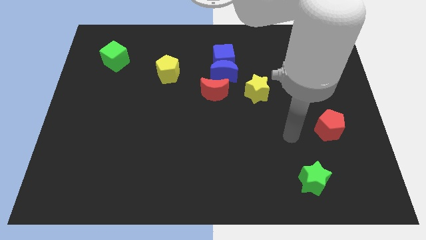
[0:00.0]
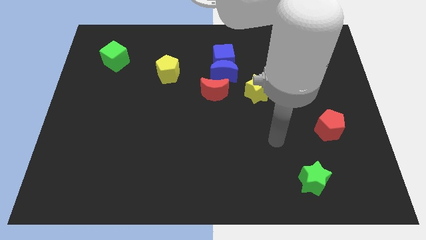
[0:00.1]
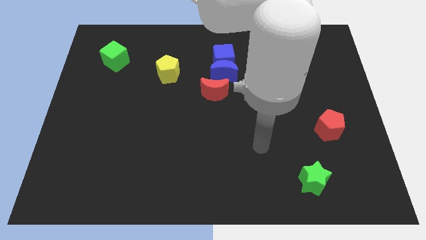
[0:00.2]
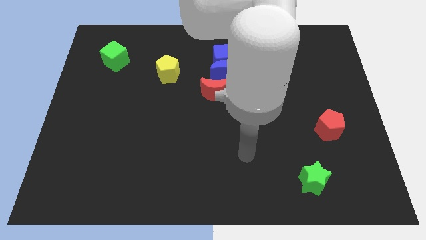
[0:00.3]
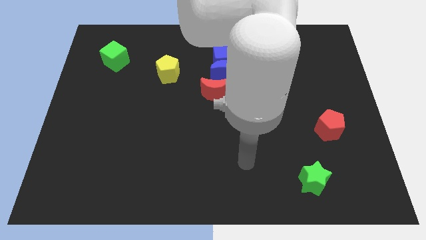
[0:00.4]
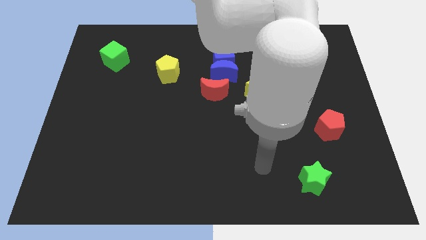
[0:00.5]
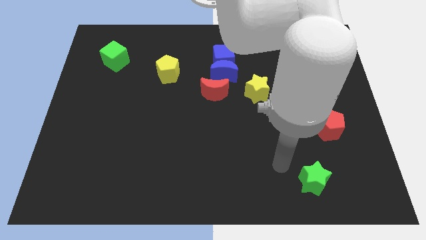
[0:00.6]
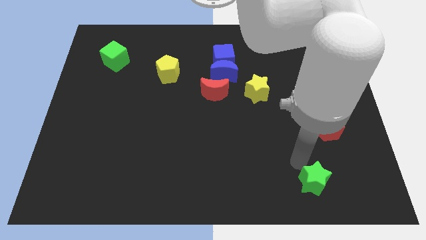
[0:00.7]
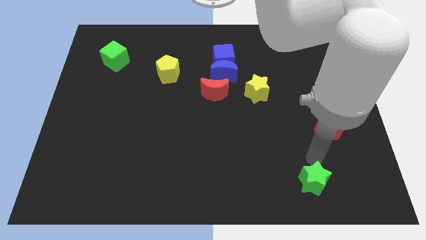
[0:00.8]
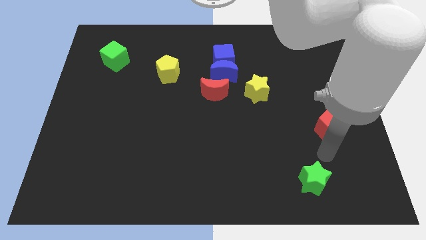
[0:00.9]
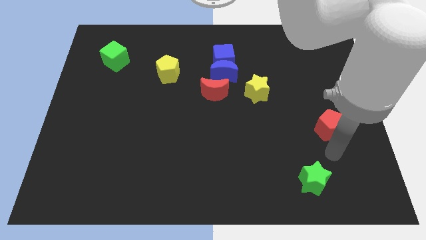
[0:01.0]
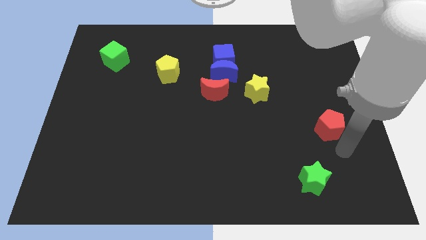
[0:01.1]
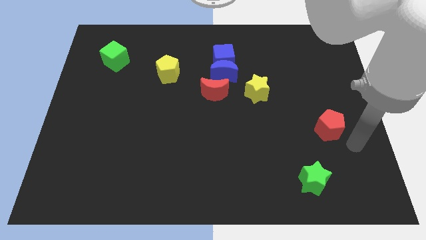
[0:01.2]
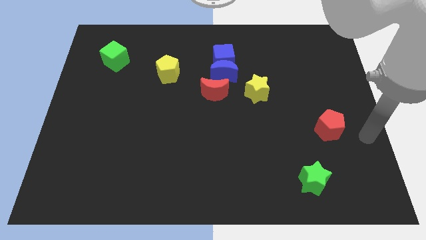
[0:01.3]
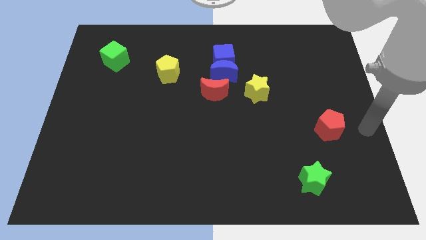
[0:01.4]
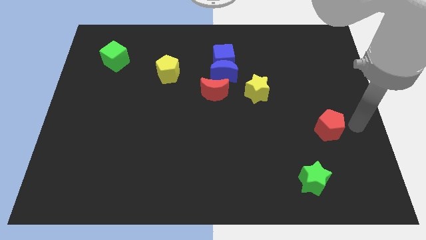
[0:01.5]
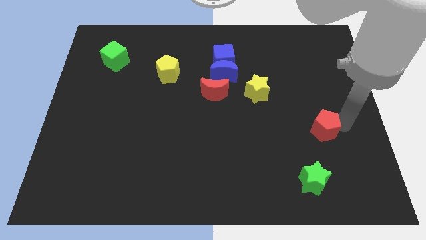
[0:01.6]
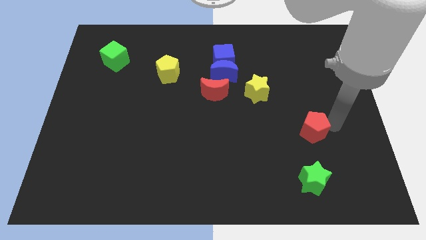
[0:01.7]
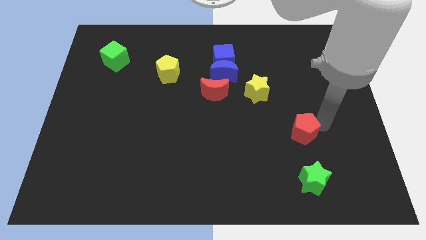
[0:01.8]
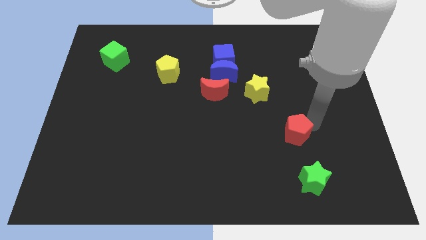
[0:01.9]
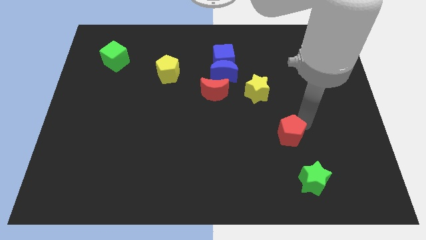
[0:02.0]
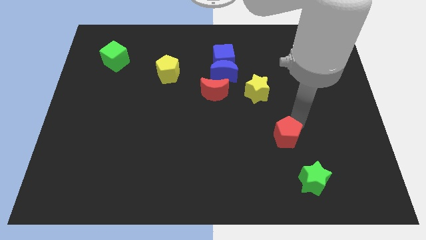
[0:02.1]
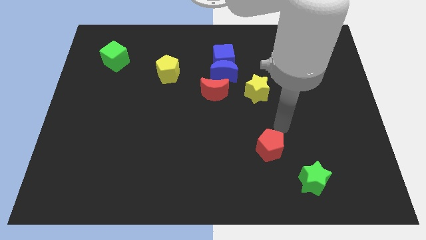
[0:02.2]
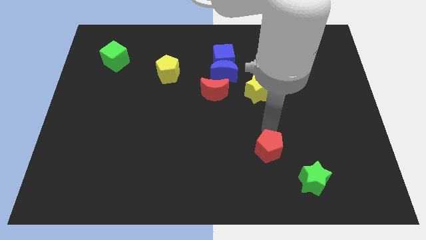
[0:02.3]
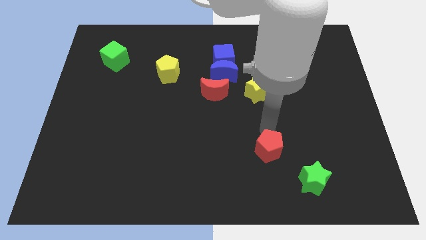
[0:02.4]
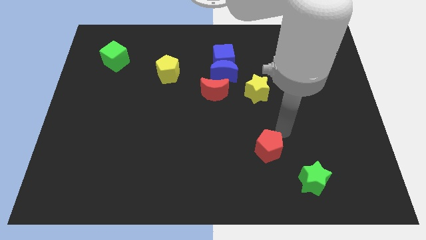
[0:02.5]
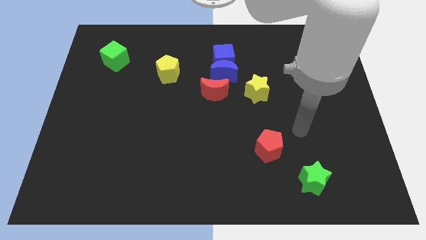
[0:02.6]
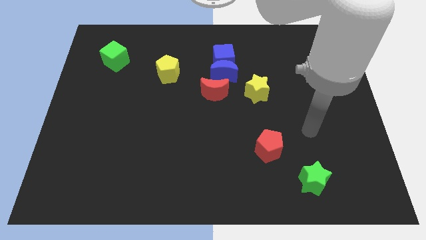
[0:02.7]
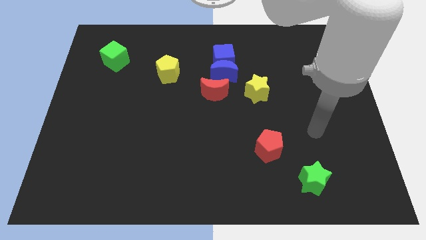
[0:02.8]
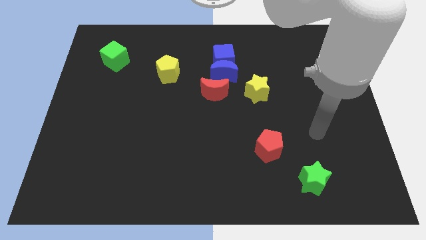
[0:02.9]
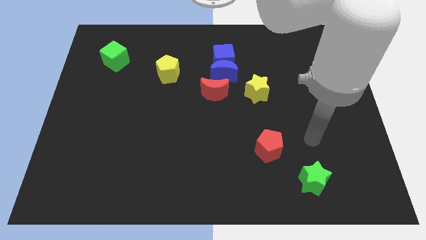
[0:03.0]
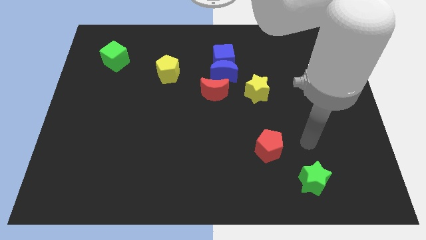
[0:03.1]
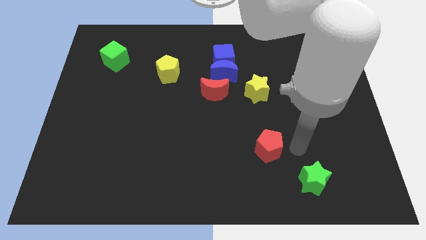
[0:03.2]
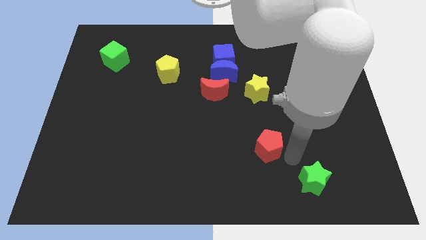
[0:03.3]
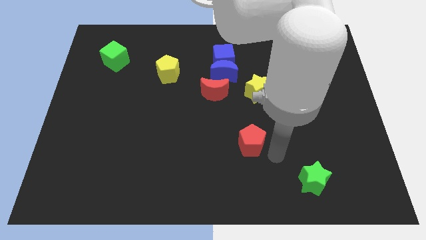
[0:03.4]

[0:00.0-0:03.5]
drag the red pentagon diagonally top left to the green star

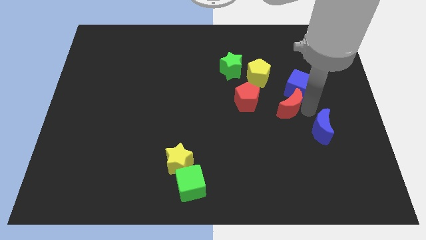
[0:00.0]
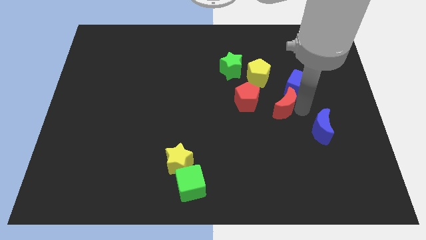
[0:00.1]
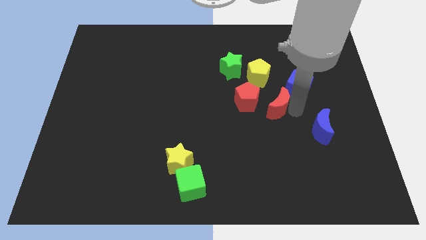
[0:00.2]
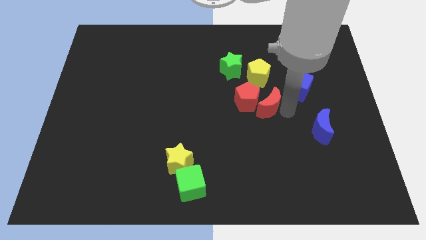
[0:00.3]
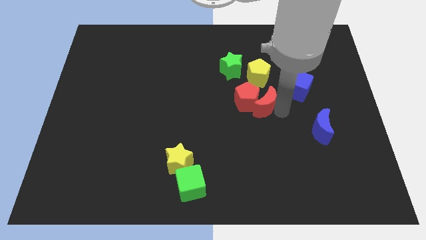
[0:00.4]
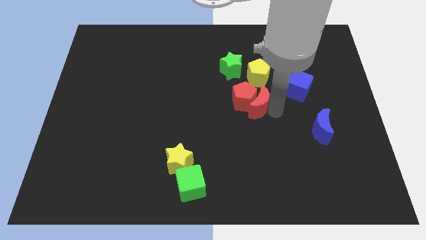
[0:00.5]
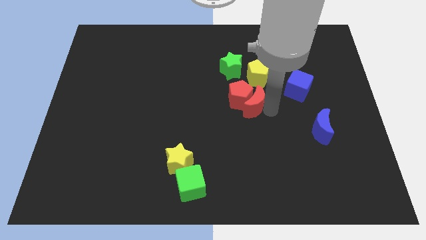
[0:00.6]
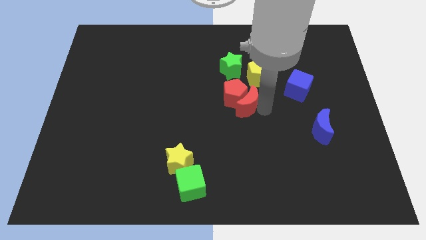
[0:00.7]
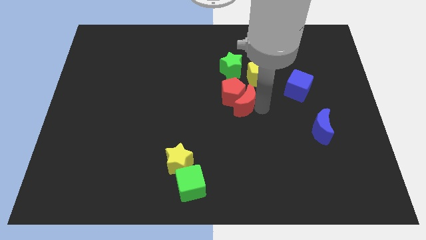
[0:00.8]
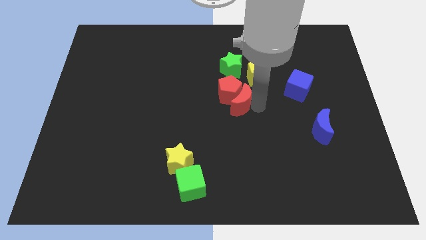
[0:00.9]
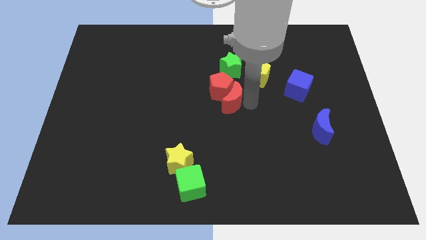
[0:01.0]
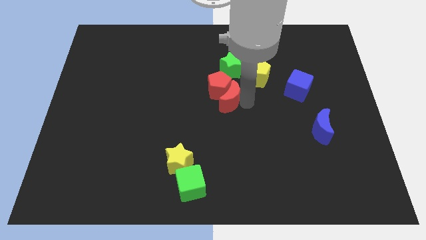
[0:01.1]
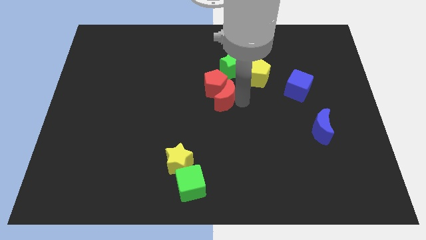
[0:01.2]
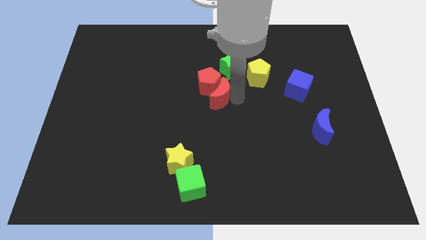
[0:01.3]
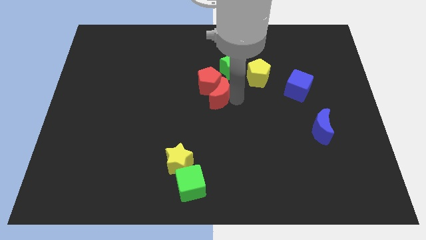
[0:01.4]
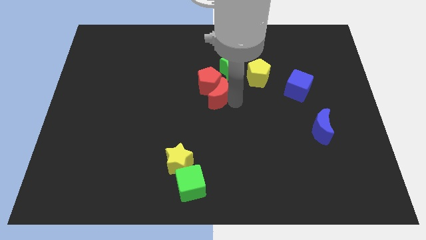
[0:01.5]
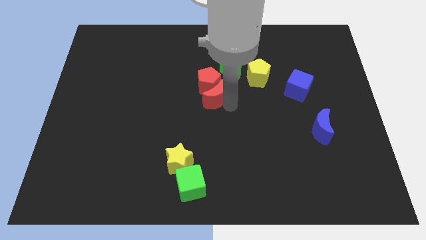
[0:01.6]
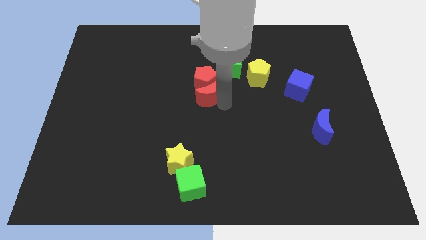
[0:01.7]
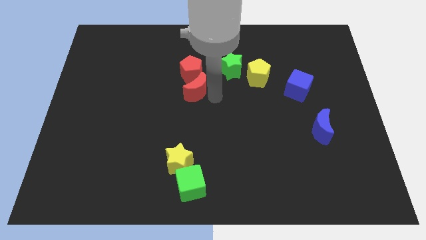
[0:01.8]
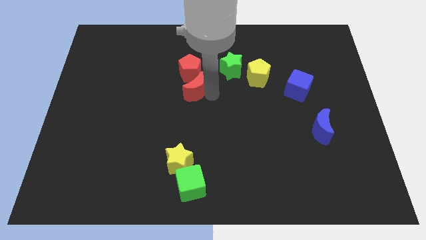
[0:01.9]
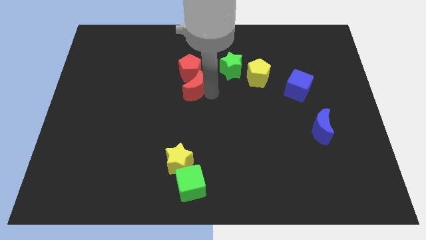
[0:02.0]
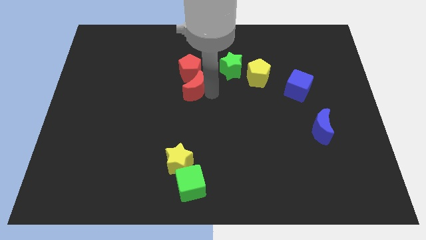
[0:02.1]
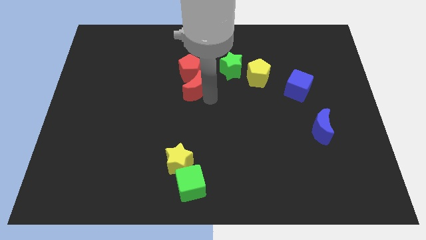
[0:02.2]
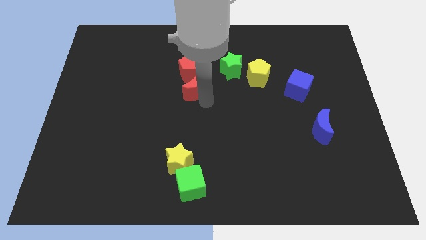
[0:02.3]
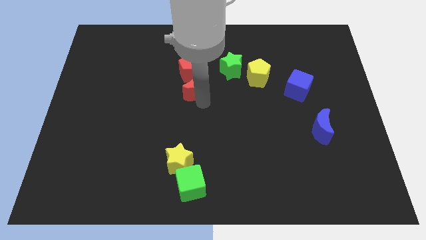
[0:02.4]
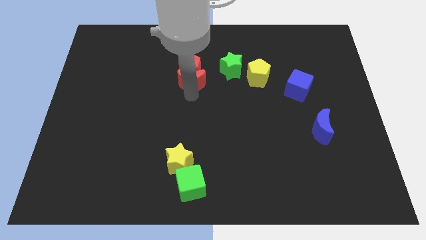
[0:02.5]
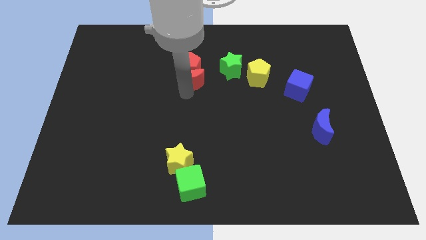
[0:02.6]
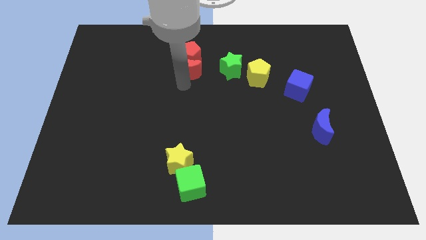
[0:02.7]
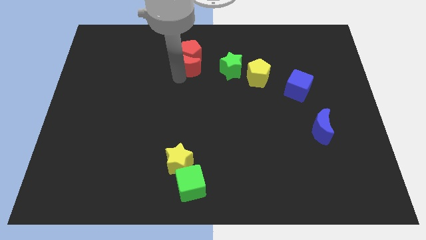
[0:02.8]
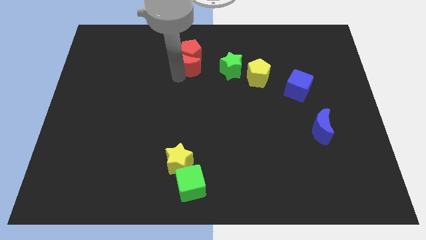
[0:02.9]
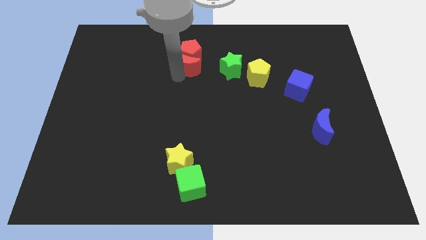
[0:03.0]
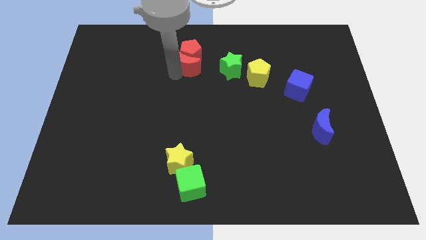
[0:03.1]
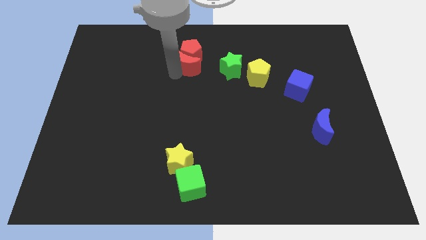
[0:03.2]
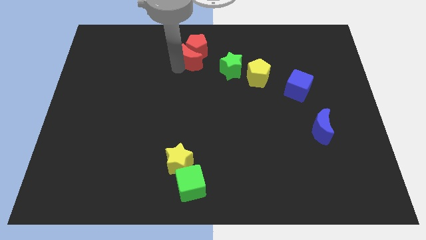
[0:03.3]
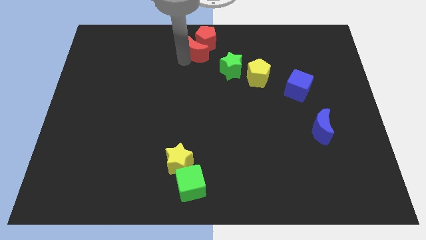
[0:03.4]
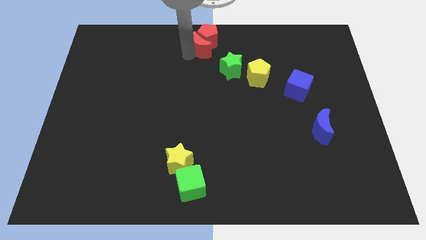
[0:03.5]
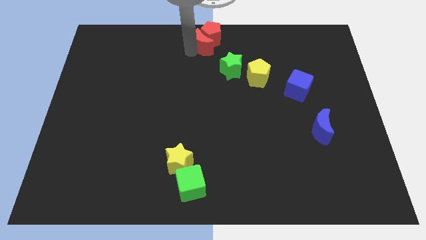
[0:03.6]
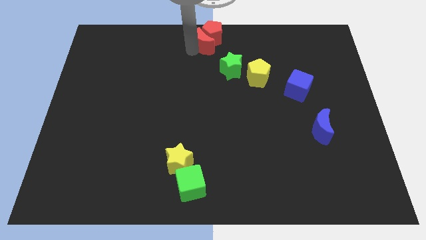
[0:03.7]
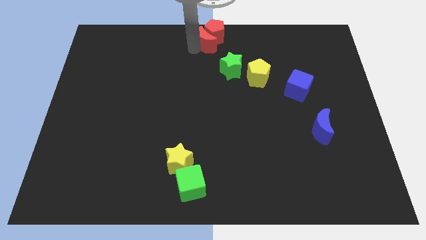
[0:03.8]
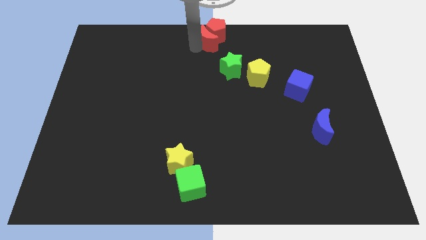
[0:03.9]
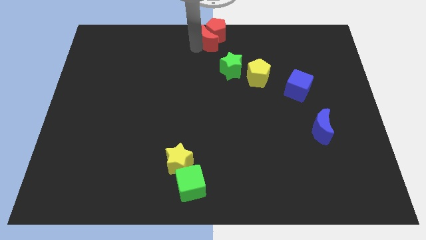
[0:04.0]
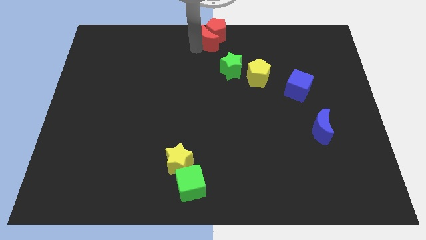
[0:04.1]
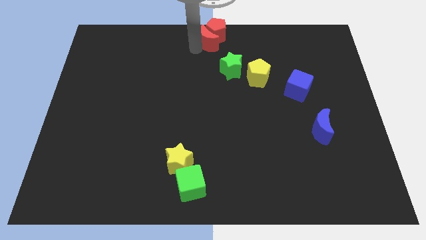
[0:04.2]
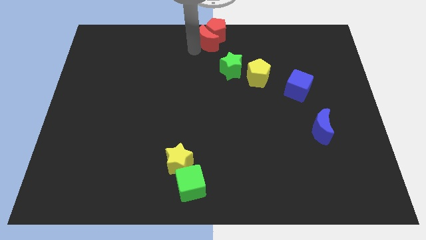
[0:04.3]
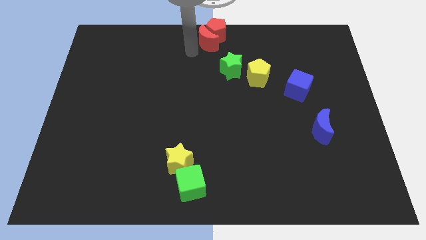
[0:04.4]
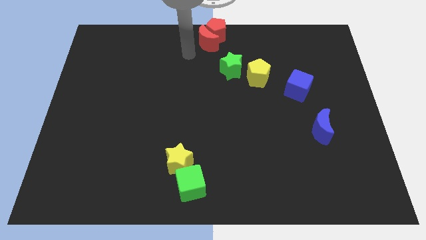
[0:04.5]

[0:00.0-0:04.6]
push red blocks to the top middle of the board

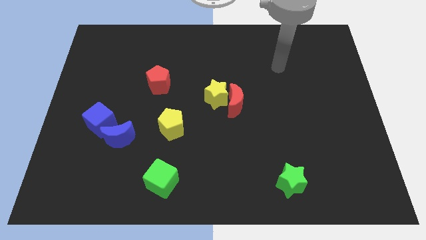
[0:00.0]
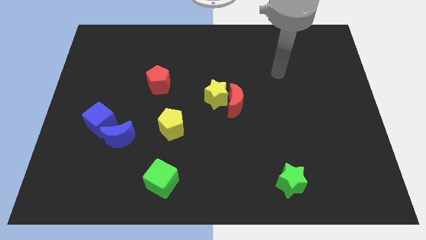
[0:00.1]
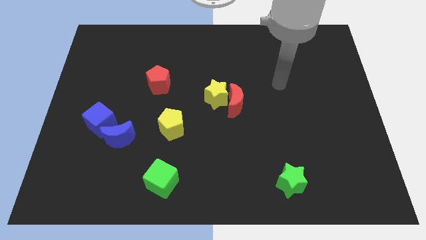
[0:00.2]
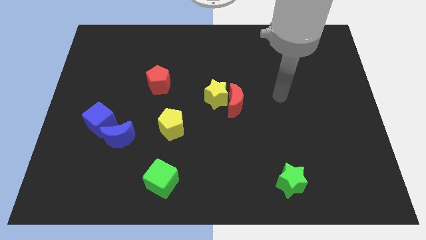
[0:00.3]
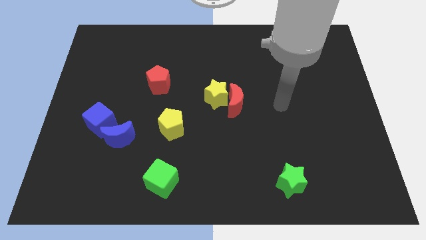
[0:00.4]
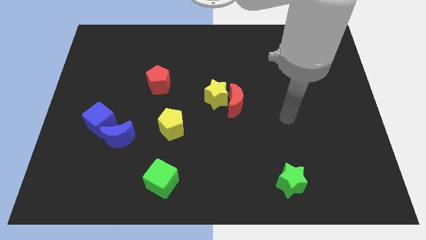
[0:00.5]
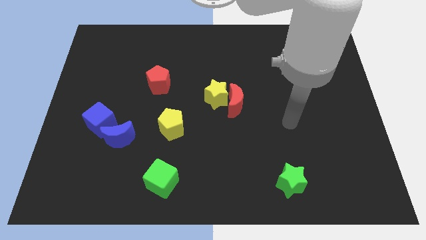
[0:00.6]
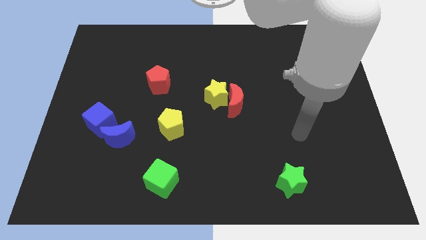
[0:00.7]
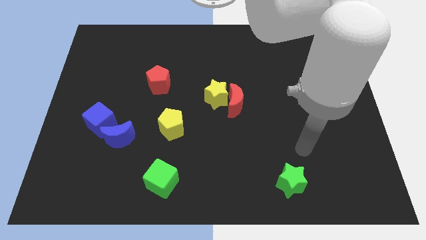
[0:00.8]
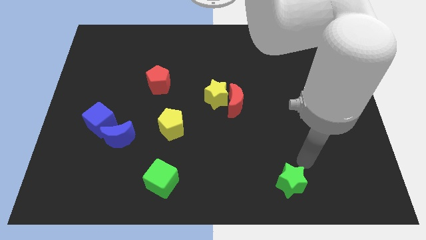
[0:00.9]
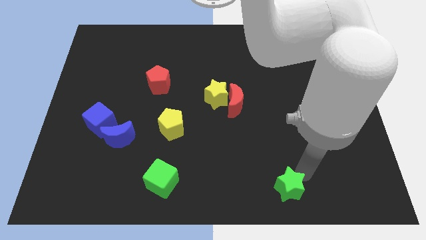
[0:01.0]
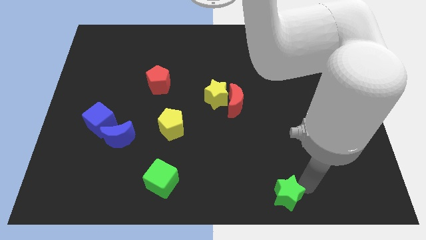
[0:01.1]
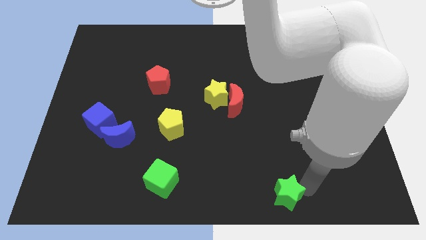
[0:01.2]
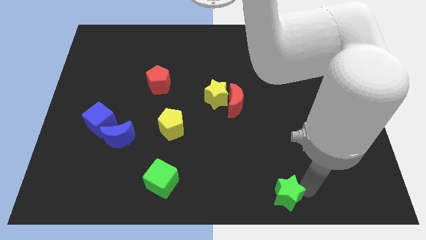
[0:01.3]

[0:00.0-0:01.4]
move the green star to the bottom center
